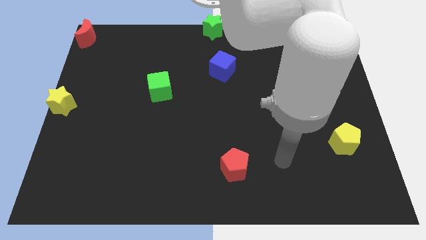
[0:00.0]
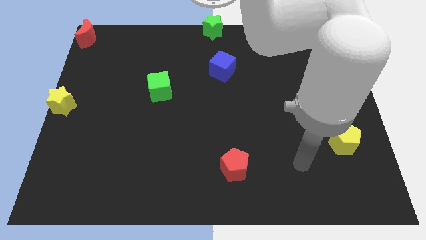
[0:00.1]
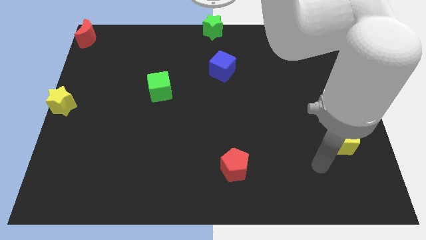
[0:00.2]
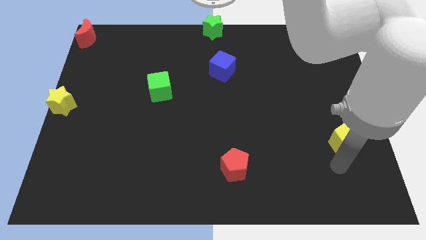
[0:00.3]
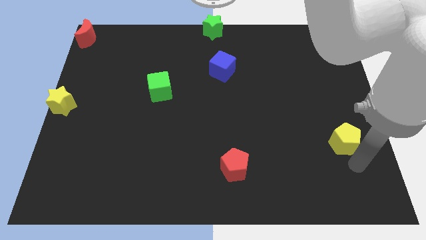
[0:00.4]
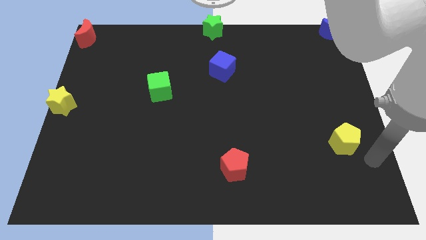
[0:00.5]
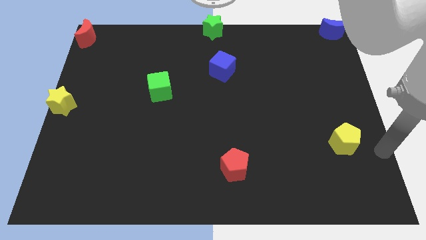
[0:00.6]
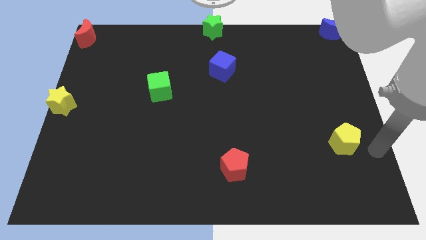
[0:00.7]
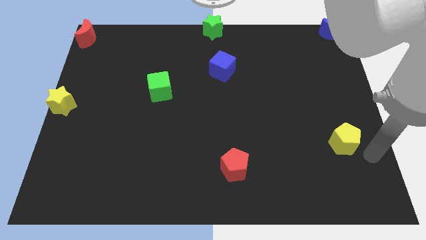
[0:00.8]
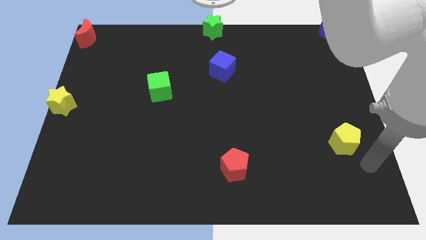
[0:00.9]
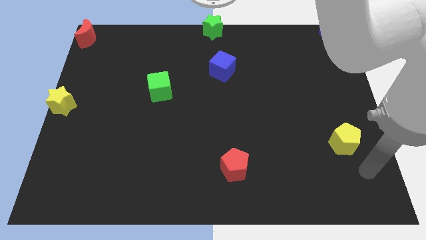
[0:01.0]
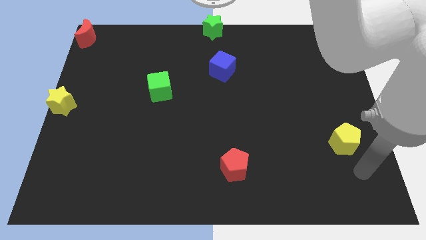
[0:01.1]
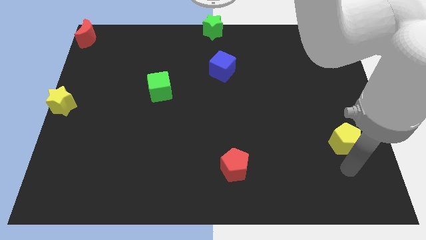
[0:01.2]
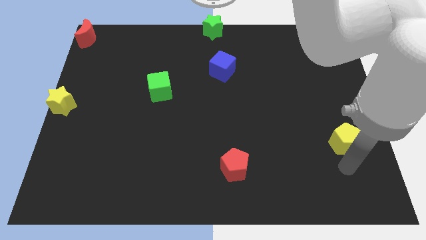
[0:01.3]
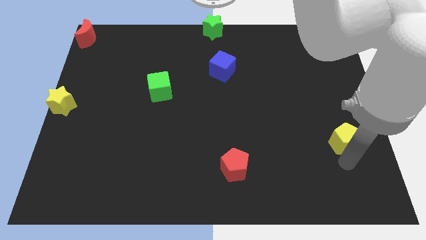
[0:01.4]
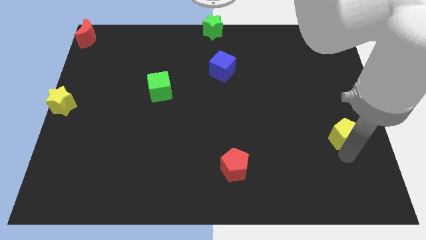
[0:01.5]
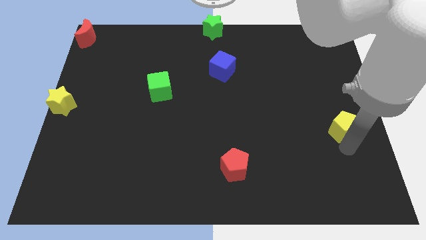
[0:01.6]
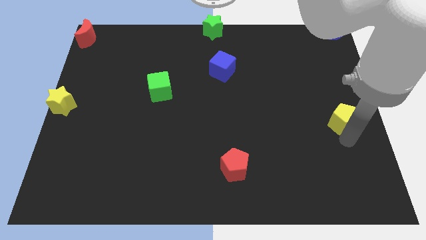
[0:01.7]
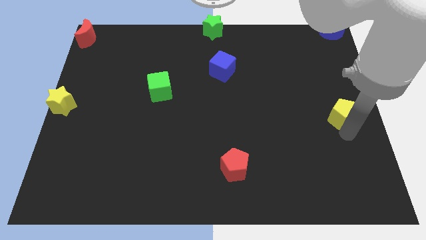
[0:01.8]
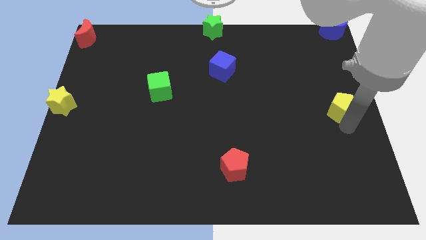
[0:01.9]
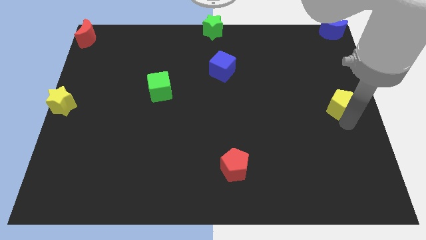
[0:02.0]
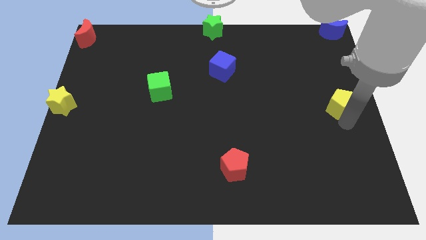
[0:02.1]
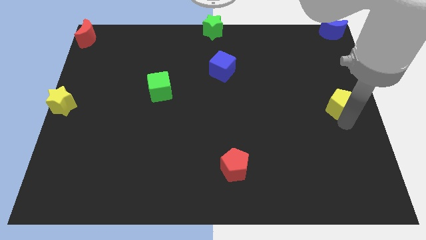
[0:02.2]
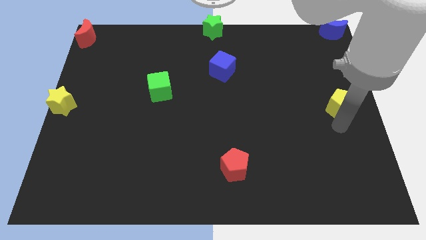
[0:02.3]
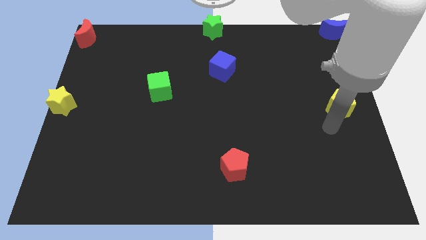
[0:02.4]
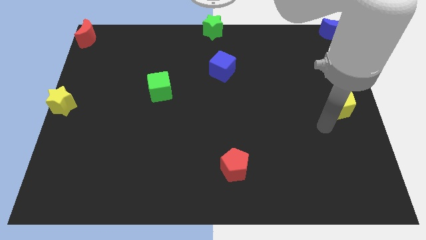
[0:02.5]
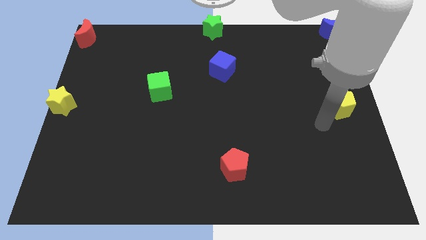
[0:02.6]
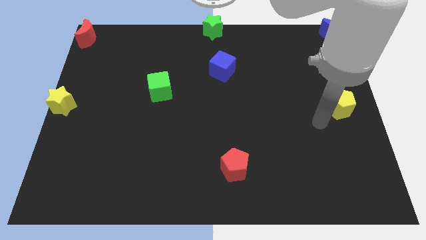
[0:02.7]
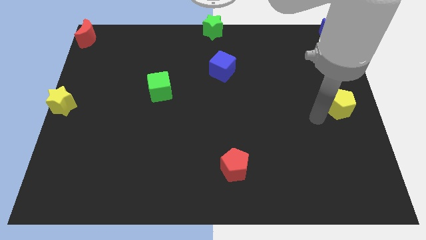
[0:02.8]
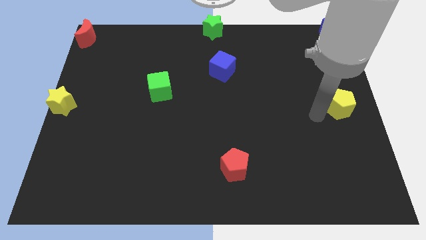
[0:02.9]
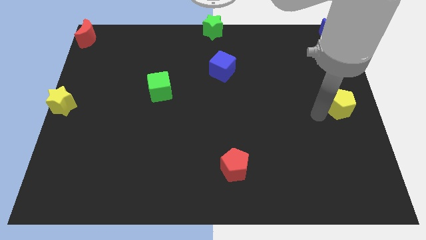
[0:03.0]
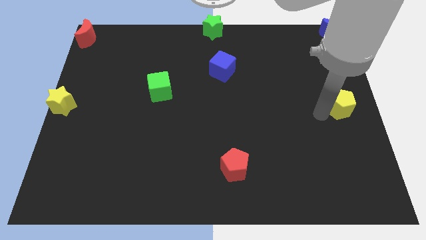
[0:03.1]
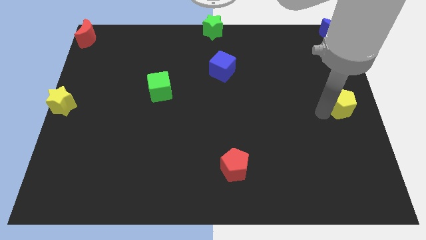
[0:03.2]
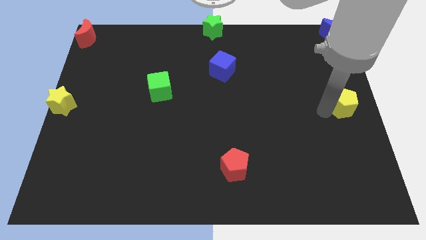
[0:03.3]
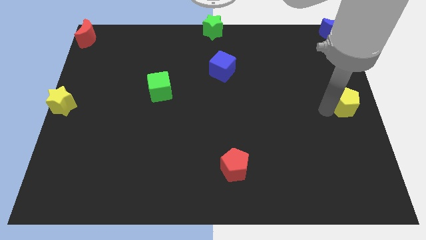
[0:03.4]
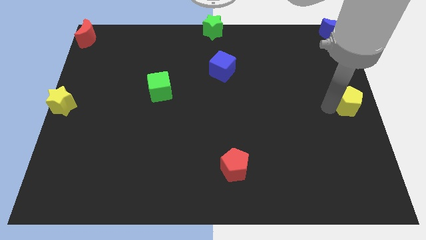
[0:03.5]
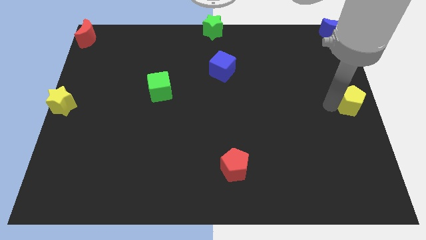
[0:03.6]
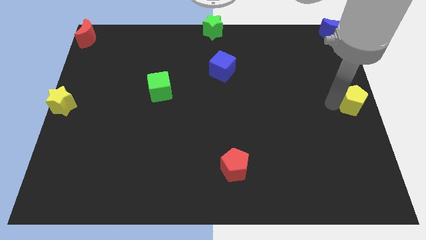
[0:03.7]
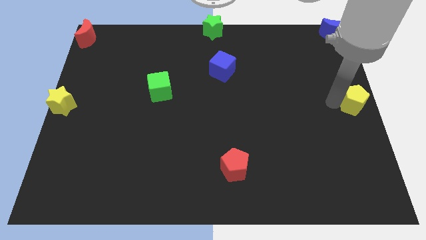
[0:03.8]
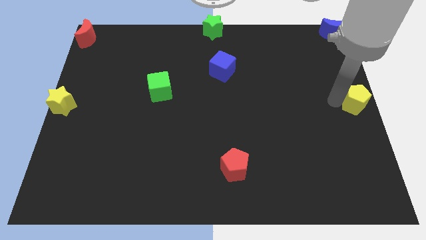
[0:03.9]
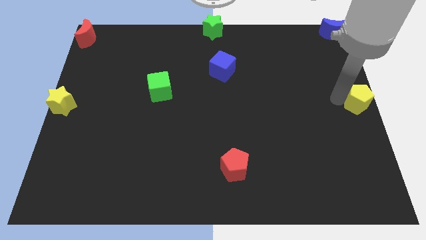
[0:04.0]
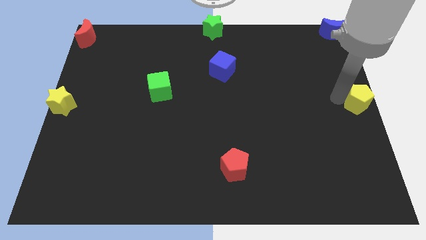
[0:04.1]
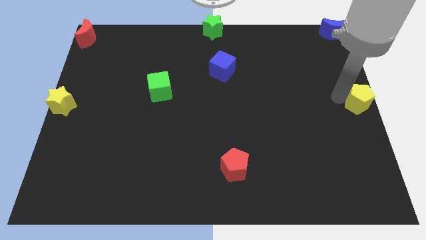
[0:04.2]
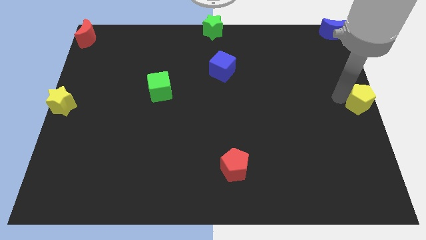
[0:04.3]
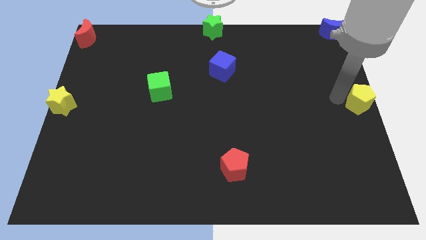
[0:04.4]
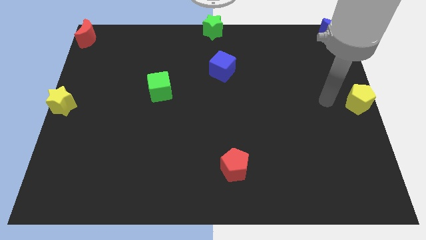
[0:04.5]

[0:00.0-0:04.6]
slide the yellow pentagon to the middle right of the board

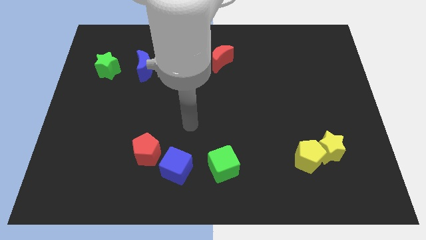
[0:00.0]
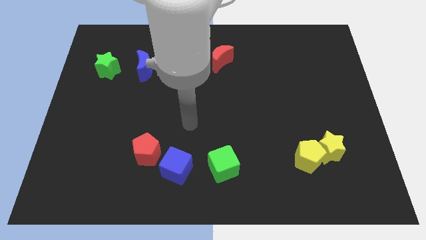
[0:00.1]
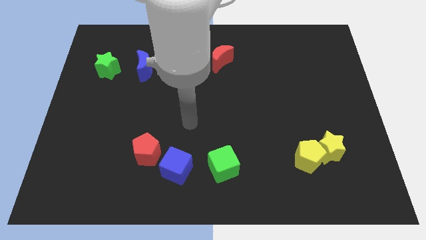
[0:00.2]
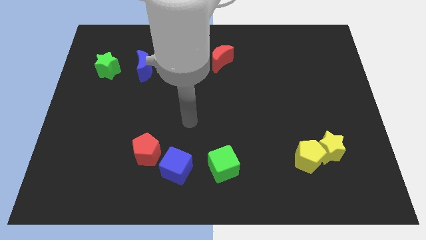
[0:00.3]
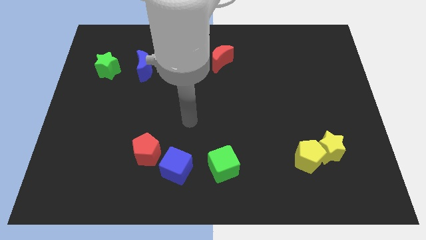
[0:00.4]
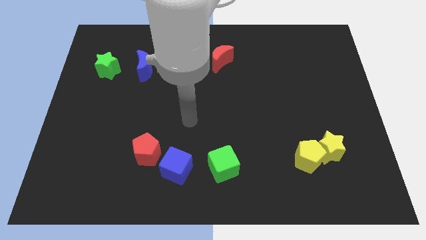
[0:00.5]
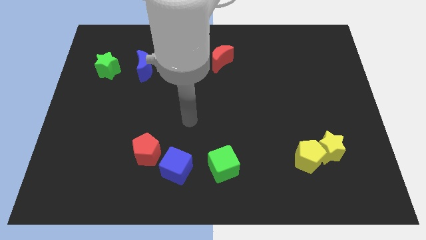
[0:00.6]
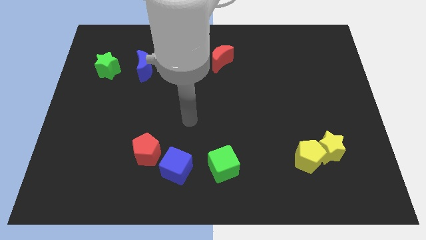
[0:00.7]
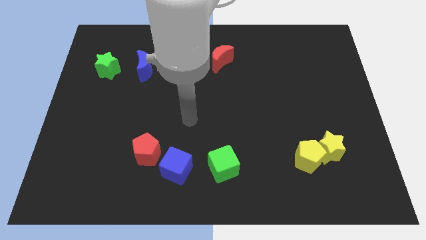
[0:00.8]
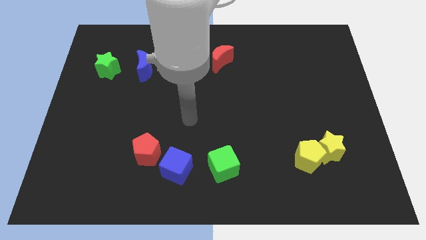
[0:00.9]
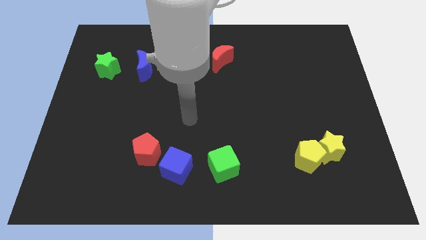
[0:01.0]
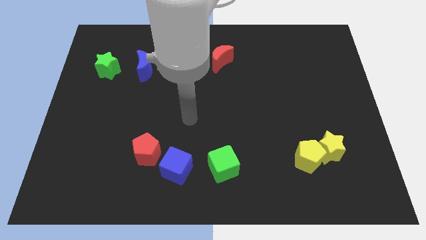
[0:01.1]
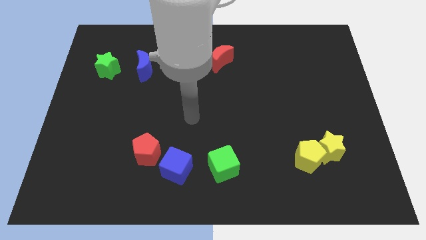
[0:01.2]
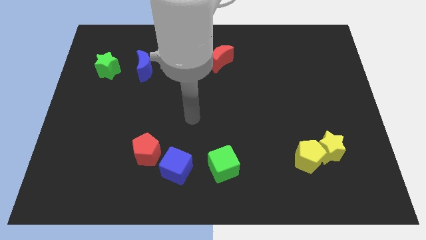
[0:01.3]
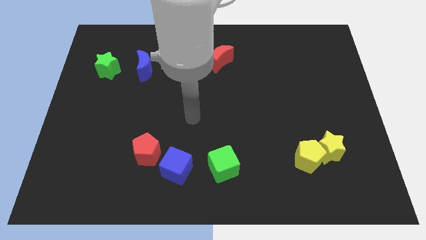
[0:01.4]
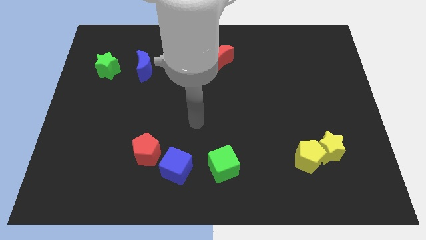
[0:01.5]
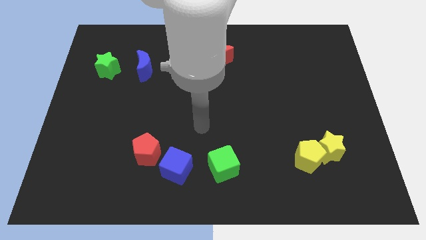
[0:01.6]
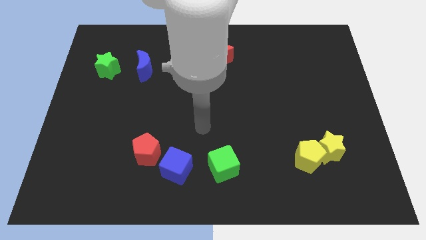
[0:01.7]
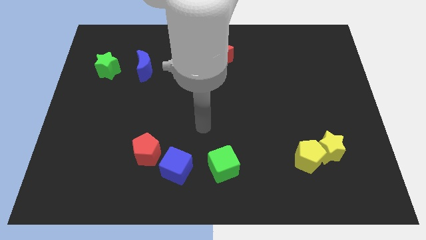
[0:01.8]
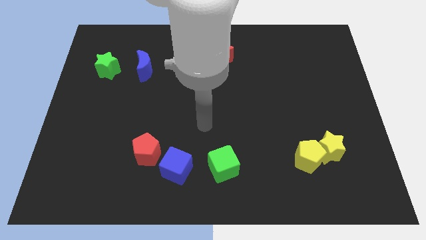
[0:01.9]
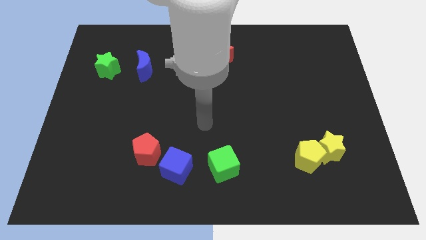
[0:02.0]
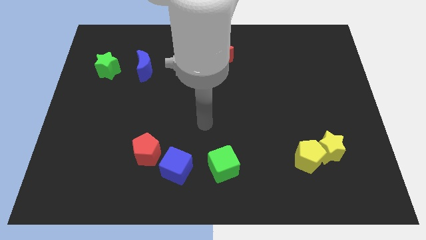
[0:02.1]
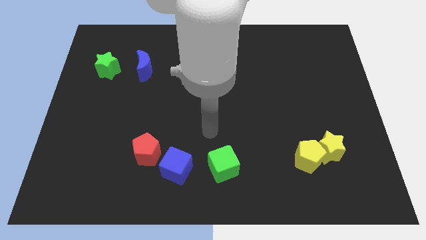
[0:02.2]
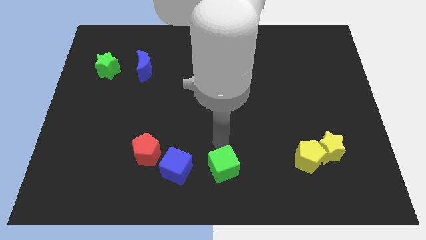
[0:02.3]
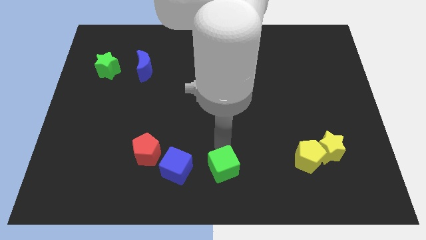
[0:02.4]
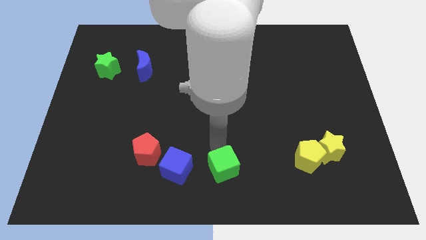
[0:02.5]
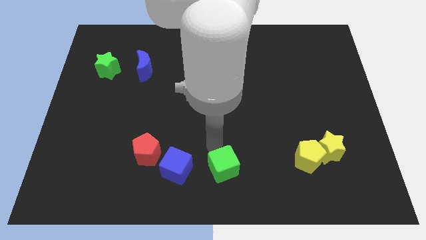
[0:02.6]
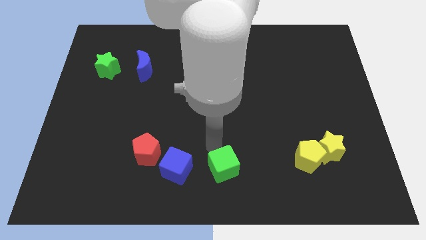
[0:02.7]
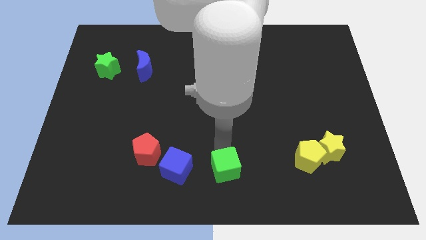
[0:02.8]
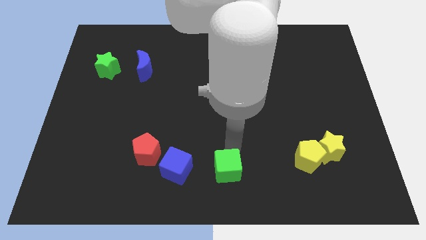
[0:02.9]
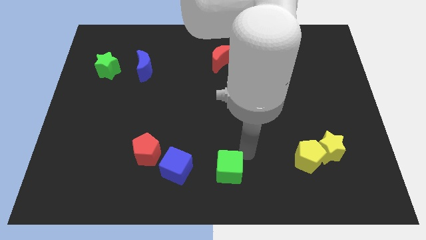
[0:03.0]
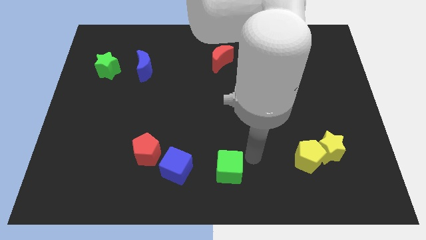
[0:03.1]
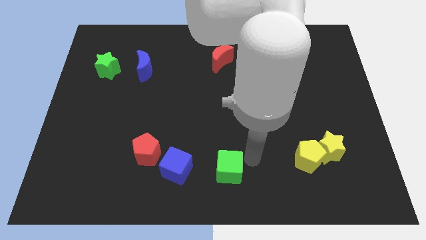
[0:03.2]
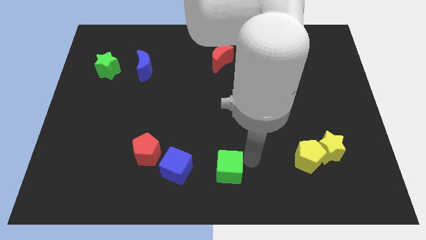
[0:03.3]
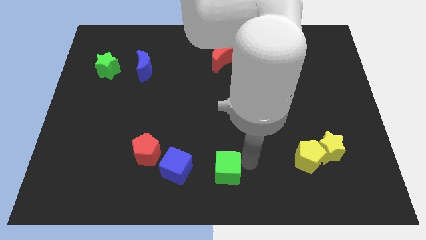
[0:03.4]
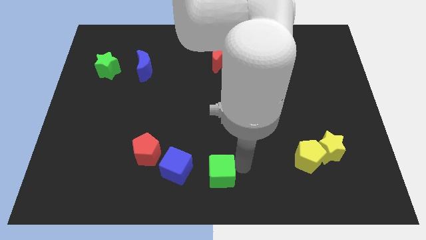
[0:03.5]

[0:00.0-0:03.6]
touch the right side of the green cube

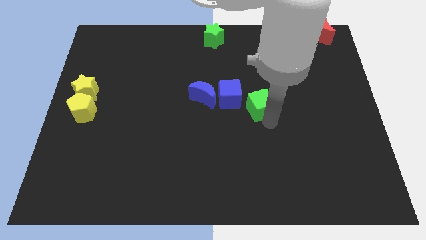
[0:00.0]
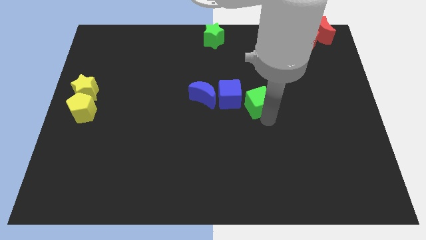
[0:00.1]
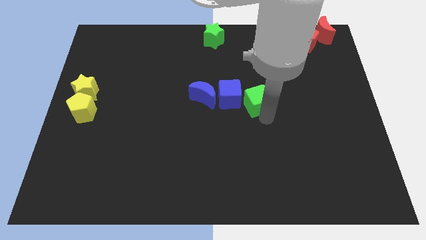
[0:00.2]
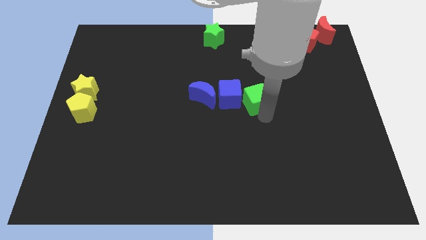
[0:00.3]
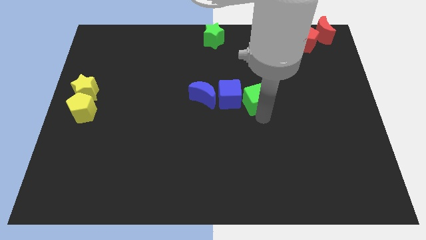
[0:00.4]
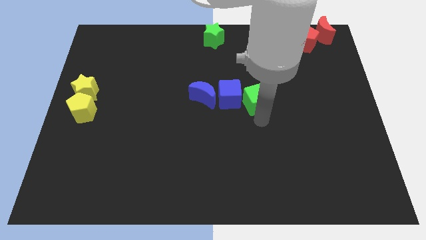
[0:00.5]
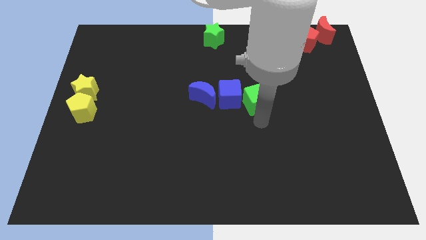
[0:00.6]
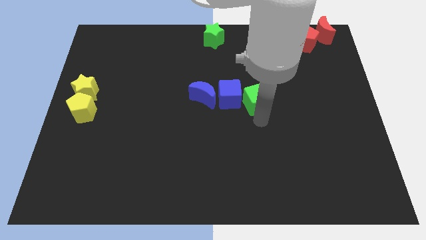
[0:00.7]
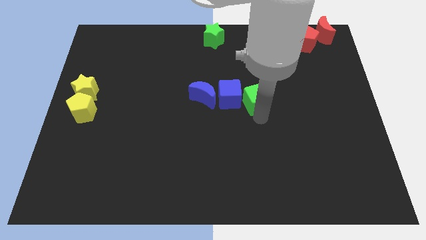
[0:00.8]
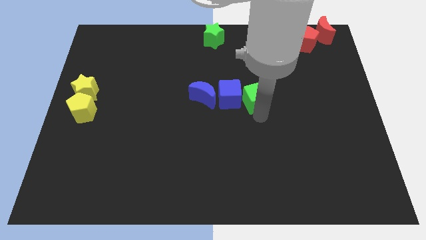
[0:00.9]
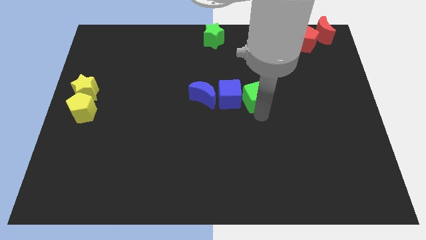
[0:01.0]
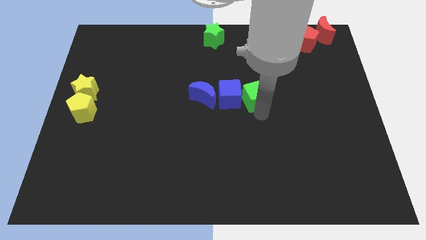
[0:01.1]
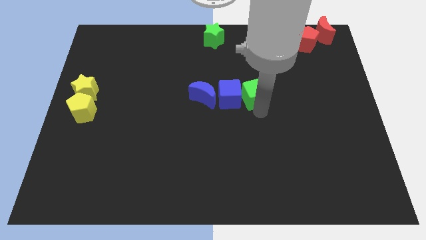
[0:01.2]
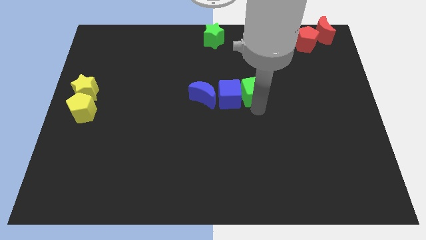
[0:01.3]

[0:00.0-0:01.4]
push the green cube to the right of the blue cube
